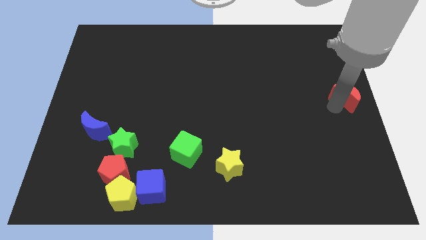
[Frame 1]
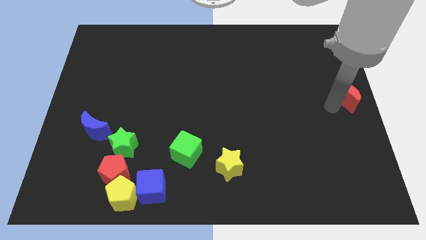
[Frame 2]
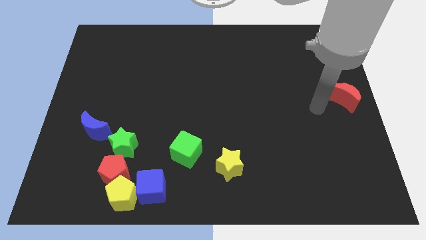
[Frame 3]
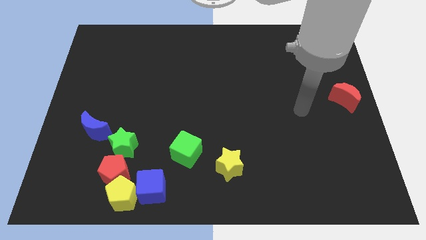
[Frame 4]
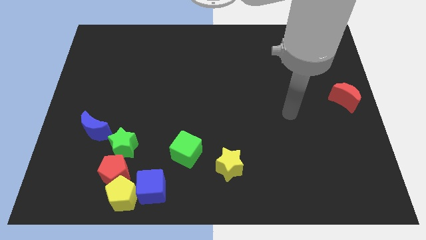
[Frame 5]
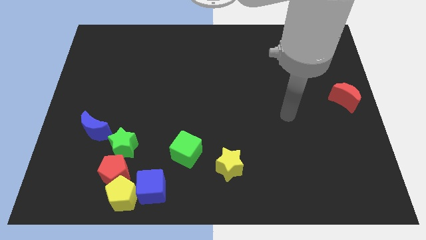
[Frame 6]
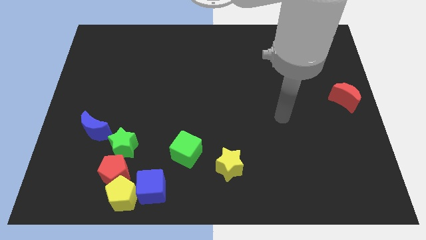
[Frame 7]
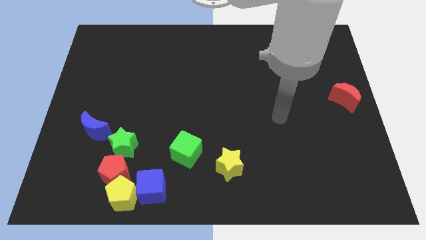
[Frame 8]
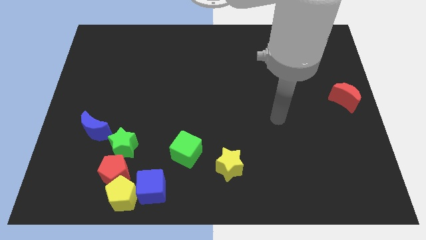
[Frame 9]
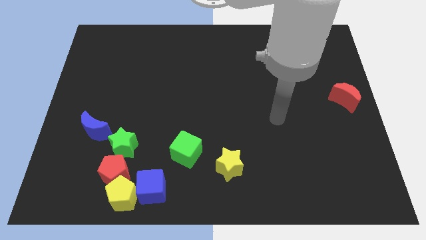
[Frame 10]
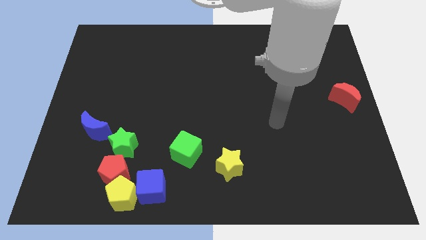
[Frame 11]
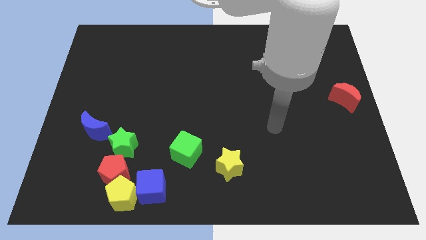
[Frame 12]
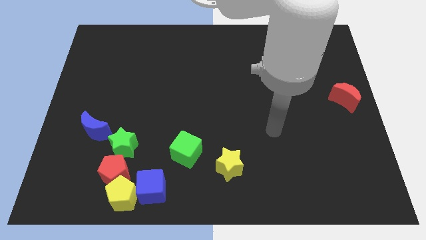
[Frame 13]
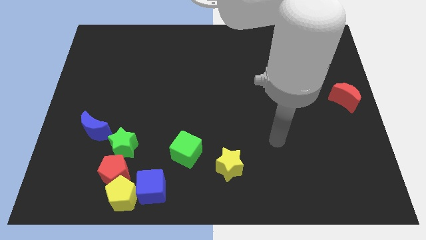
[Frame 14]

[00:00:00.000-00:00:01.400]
move the arm away from the red moon

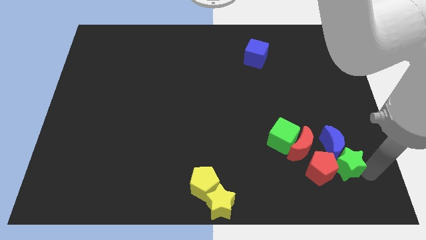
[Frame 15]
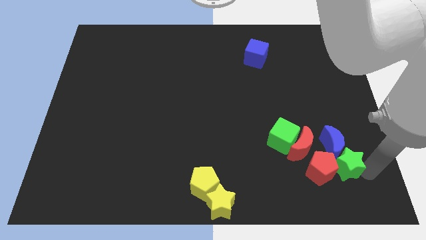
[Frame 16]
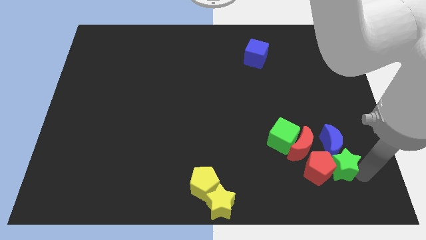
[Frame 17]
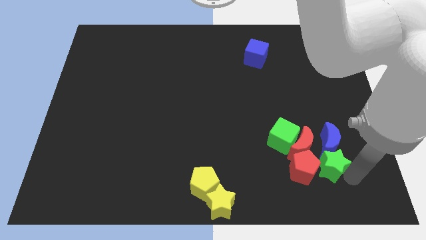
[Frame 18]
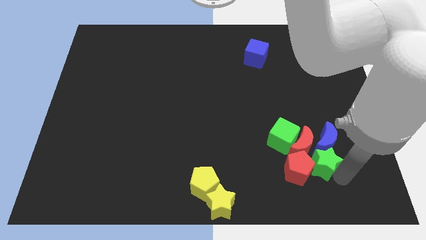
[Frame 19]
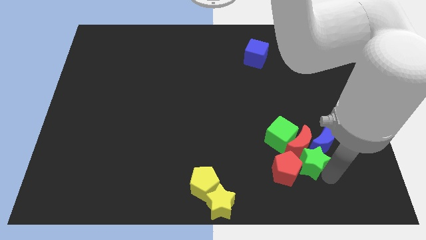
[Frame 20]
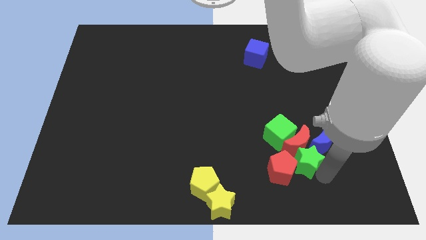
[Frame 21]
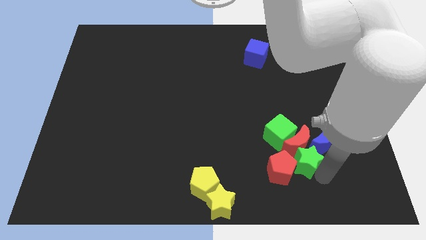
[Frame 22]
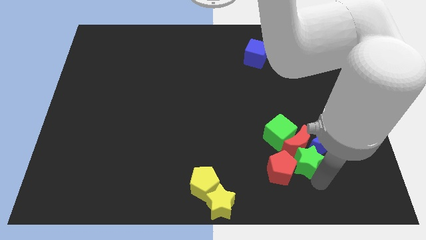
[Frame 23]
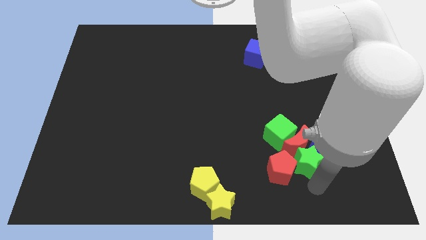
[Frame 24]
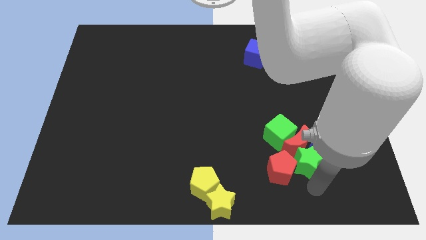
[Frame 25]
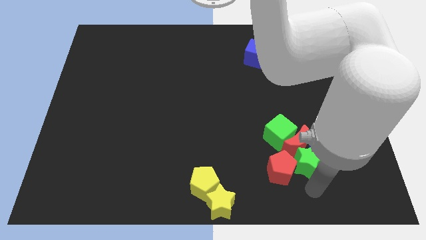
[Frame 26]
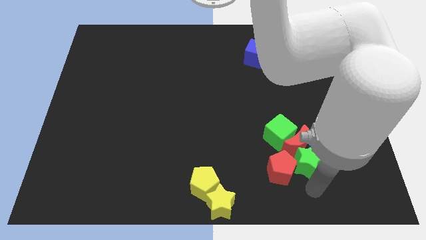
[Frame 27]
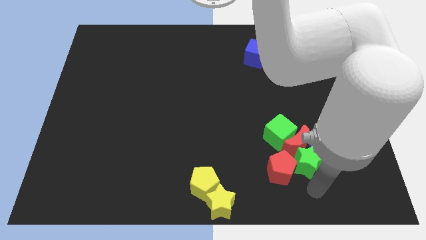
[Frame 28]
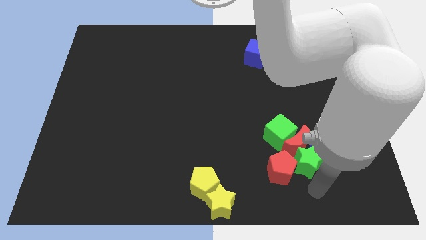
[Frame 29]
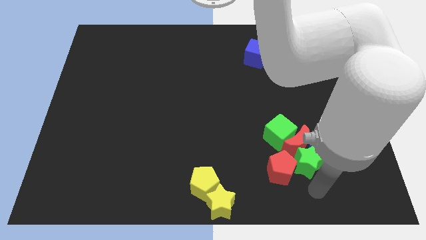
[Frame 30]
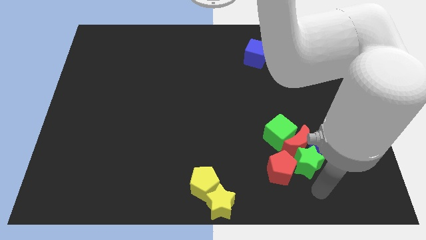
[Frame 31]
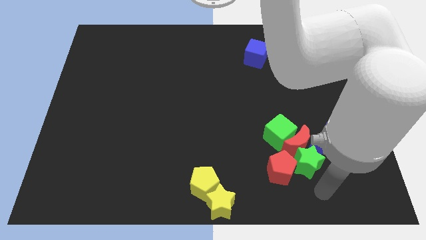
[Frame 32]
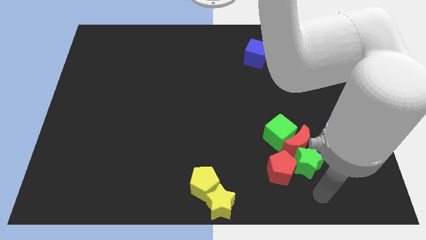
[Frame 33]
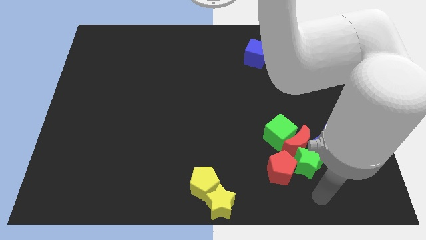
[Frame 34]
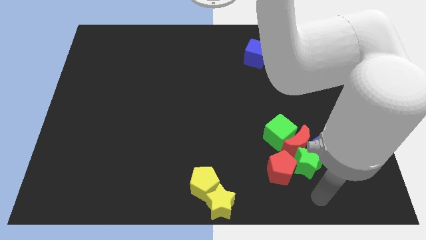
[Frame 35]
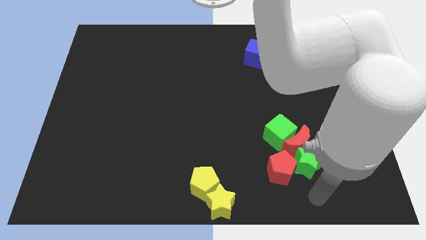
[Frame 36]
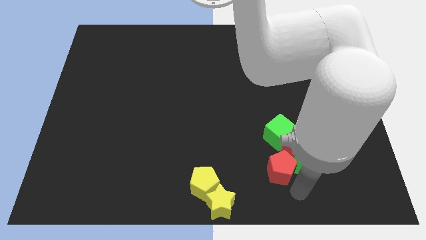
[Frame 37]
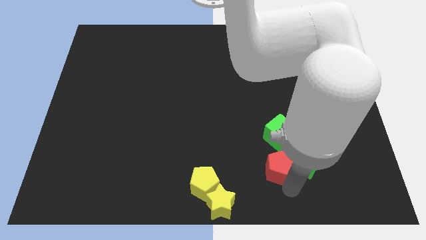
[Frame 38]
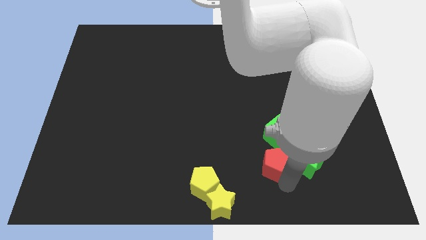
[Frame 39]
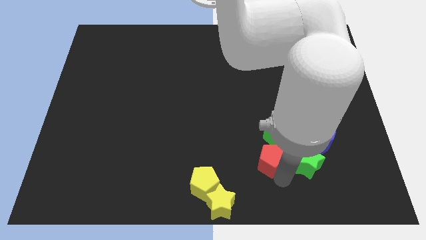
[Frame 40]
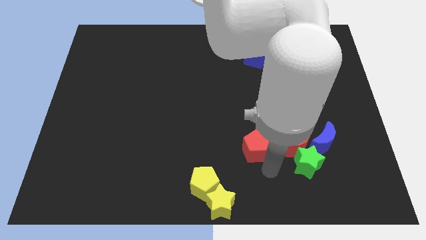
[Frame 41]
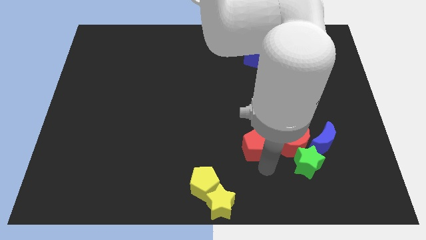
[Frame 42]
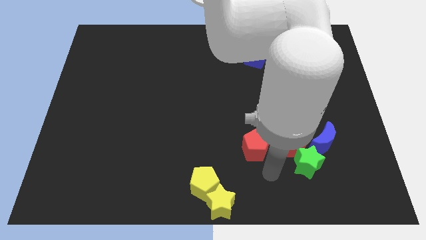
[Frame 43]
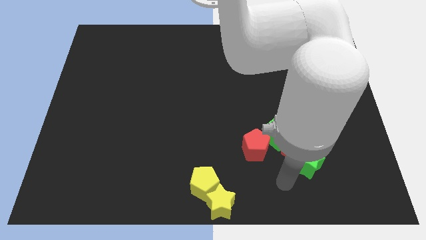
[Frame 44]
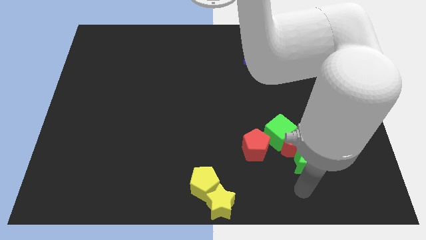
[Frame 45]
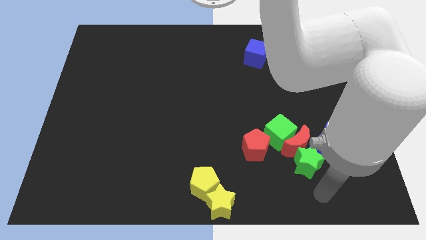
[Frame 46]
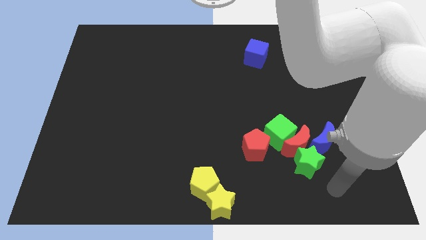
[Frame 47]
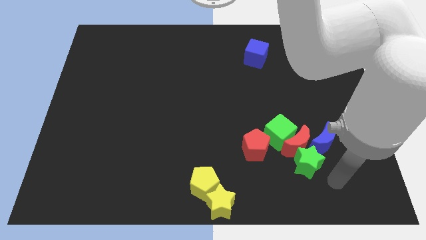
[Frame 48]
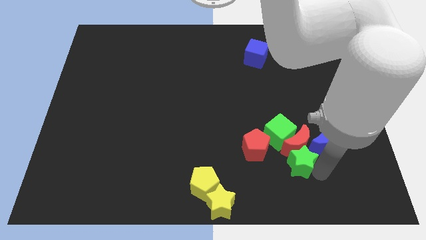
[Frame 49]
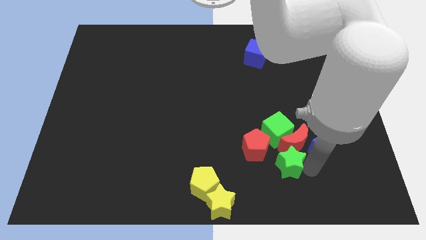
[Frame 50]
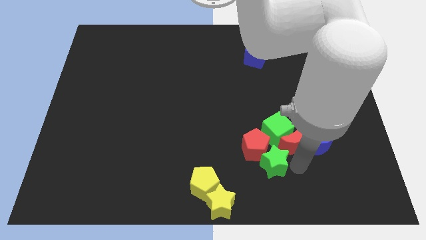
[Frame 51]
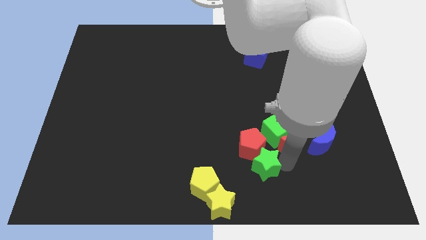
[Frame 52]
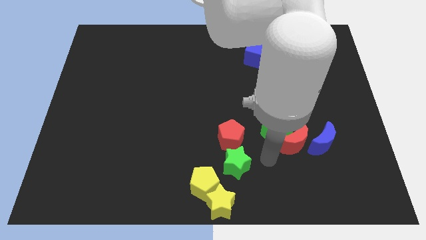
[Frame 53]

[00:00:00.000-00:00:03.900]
move the green star below the red pentagon

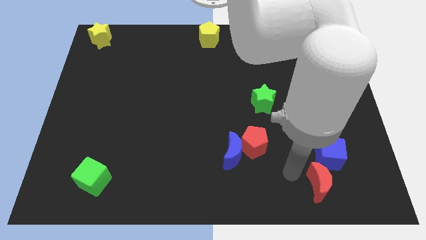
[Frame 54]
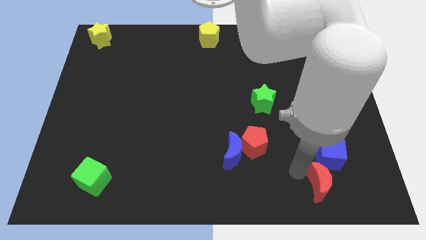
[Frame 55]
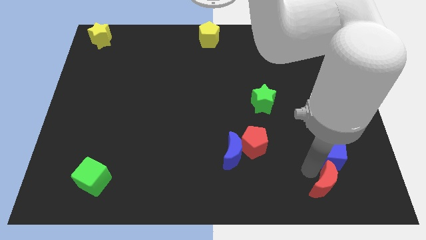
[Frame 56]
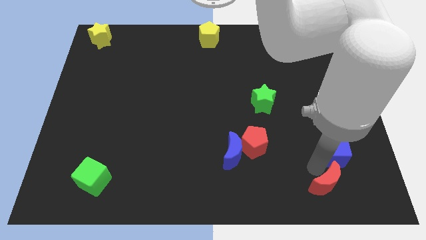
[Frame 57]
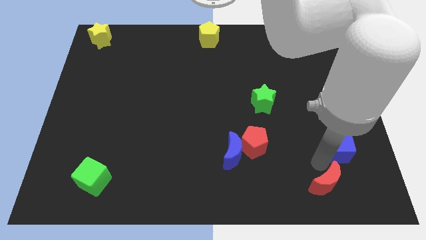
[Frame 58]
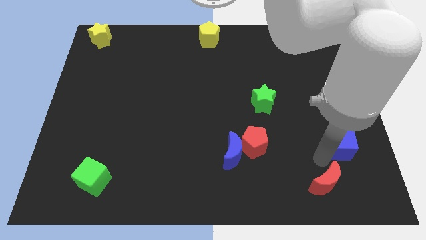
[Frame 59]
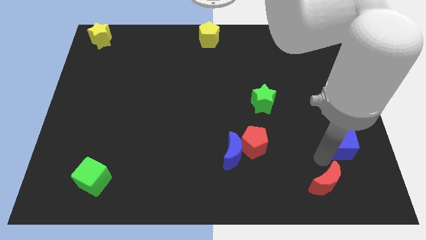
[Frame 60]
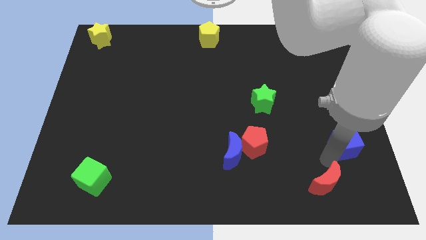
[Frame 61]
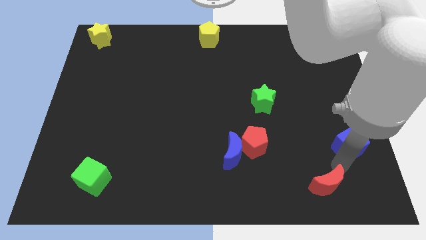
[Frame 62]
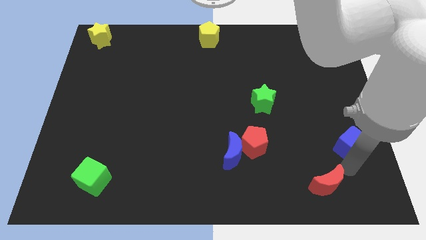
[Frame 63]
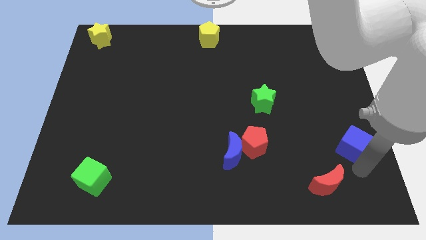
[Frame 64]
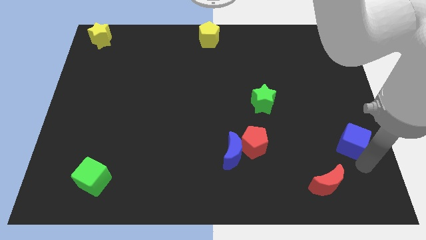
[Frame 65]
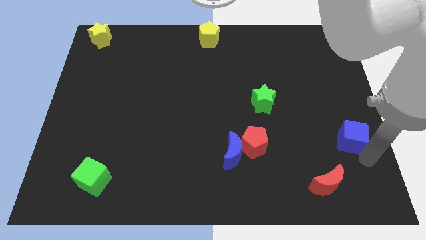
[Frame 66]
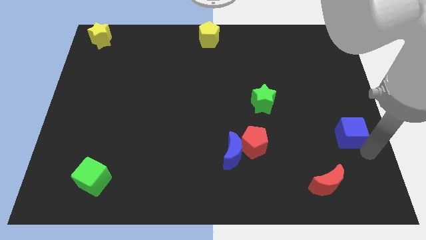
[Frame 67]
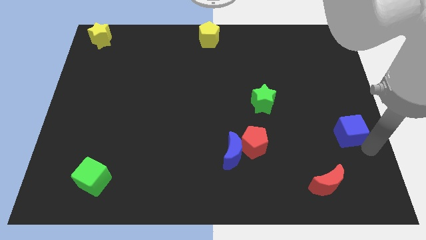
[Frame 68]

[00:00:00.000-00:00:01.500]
separate the red moon and blue cube

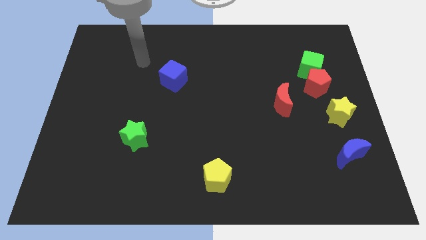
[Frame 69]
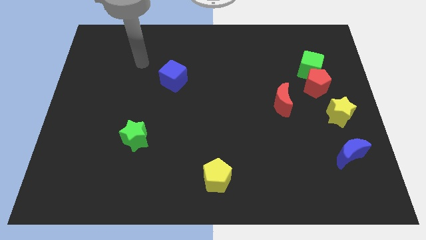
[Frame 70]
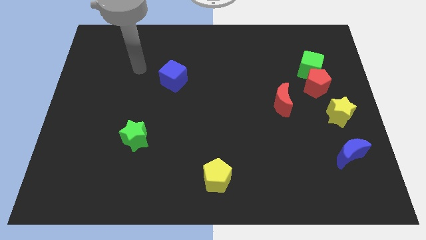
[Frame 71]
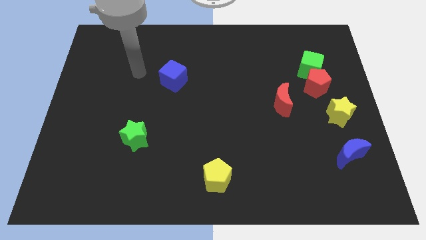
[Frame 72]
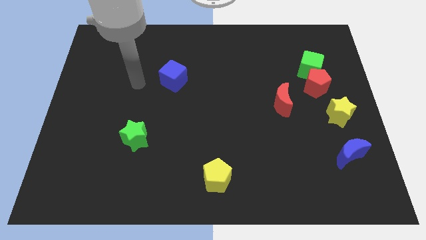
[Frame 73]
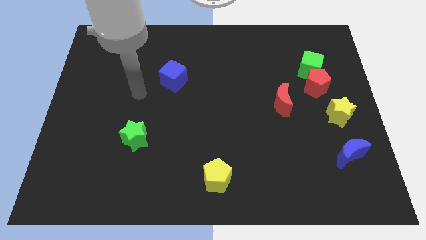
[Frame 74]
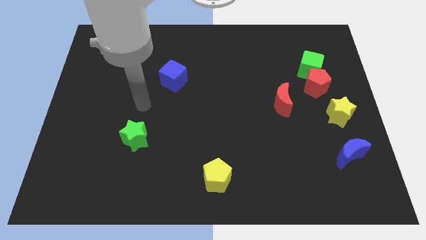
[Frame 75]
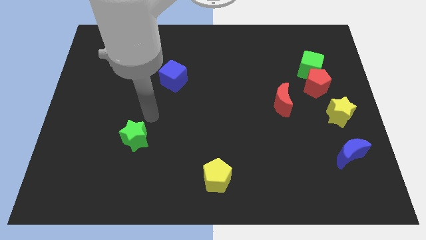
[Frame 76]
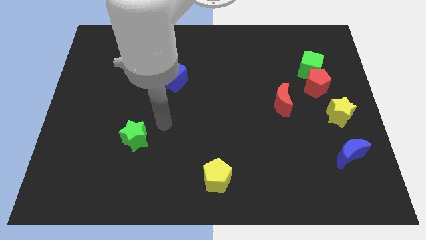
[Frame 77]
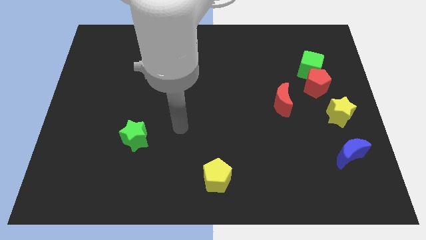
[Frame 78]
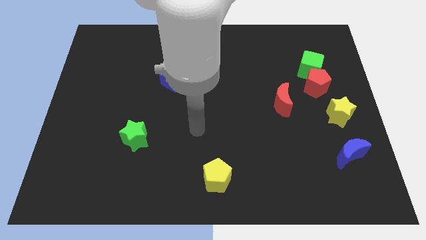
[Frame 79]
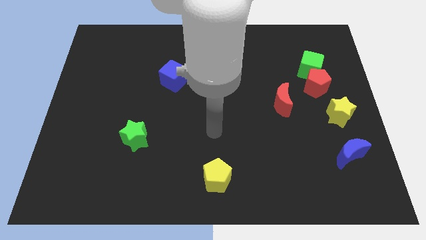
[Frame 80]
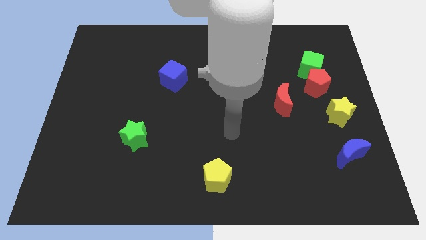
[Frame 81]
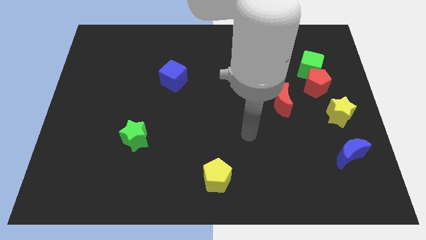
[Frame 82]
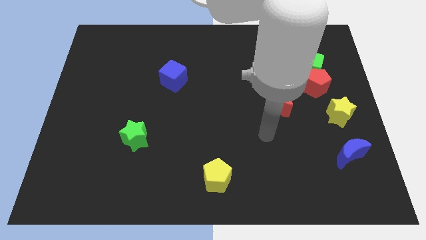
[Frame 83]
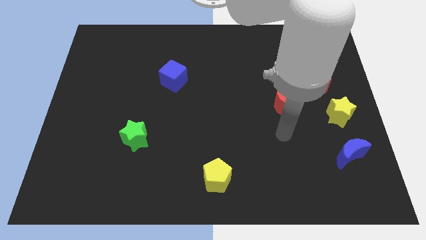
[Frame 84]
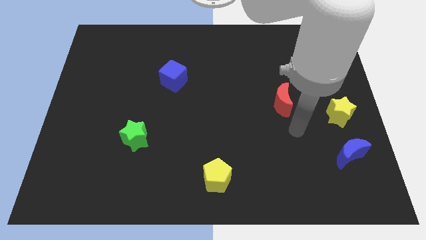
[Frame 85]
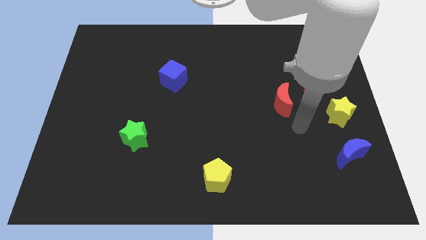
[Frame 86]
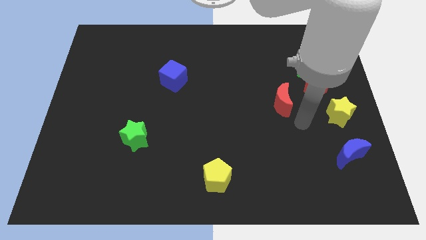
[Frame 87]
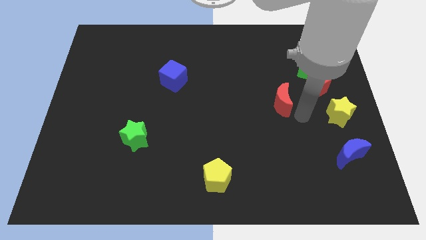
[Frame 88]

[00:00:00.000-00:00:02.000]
move the arm towards the red crescent

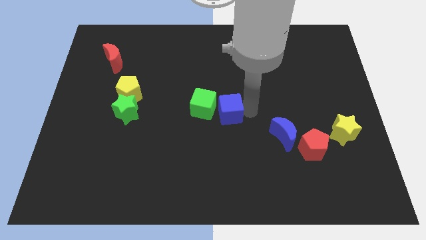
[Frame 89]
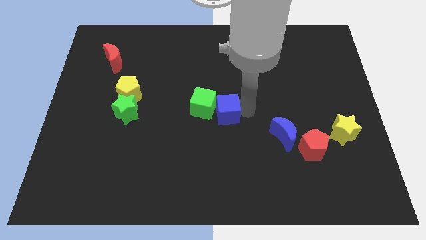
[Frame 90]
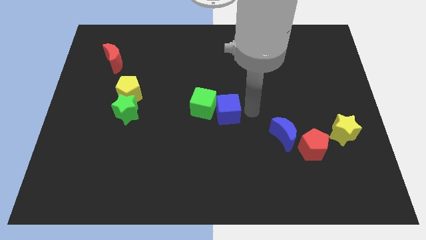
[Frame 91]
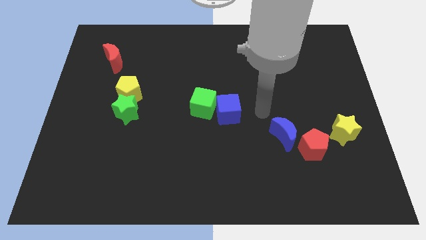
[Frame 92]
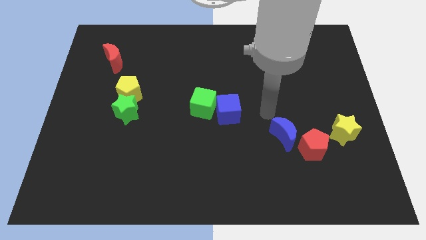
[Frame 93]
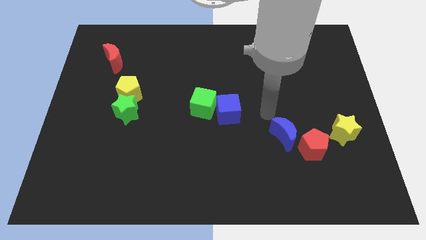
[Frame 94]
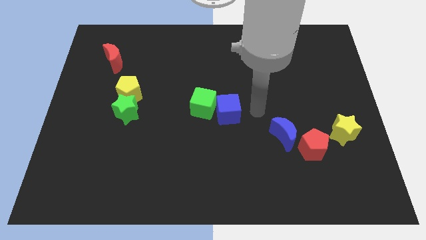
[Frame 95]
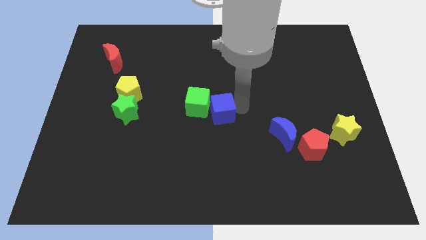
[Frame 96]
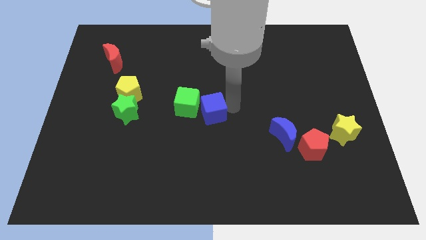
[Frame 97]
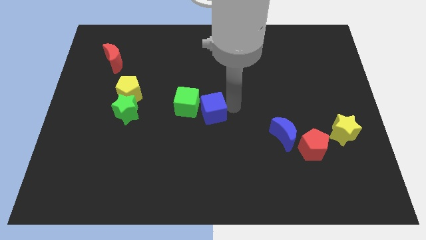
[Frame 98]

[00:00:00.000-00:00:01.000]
slide cubes towards green star
